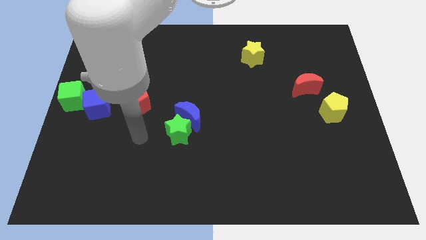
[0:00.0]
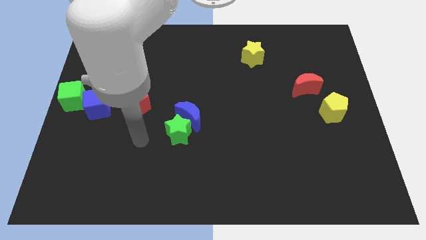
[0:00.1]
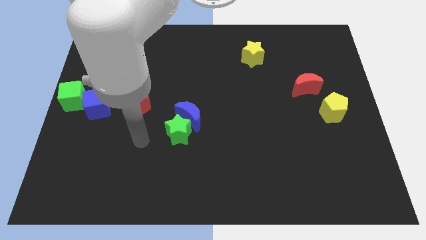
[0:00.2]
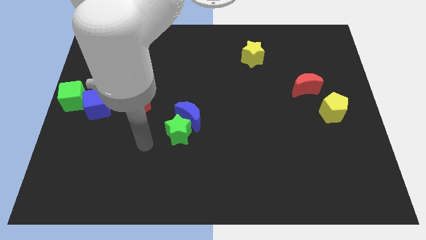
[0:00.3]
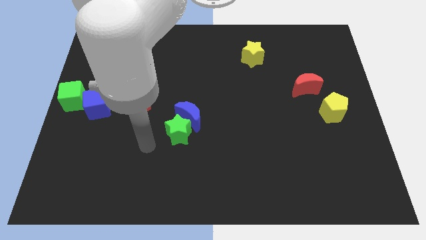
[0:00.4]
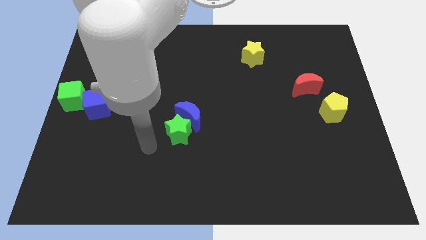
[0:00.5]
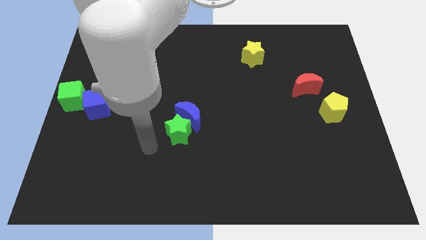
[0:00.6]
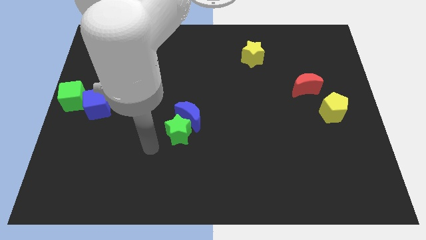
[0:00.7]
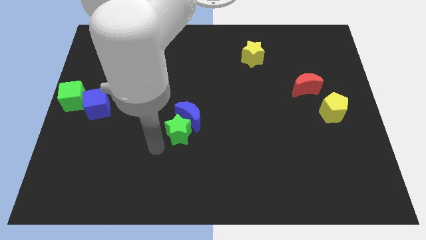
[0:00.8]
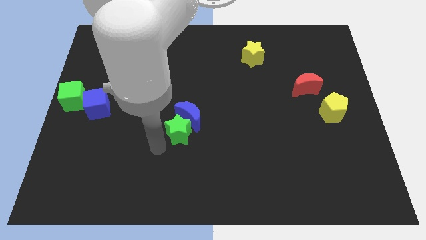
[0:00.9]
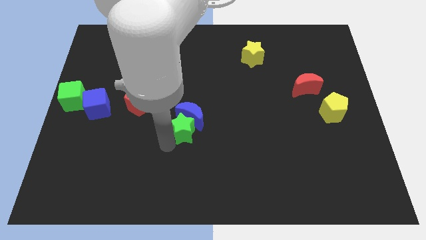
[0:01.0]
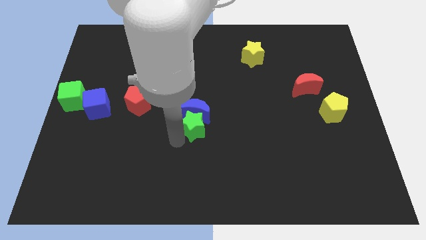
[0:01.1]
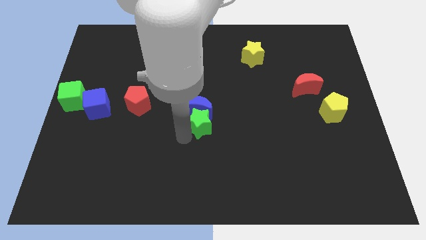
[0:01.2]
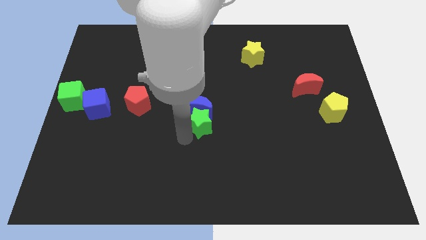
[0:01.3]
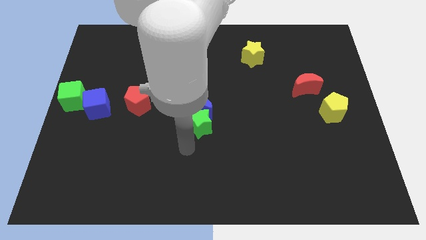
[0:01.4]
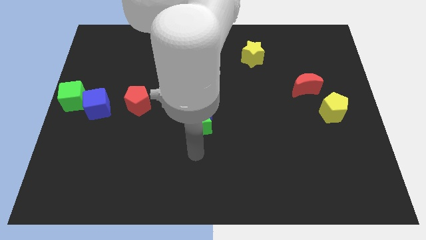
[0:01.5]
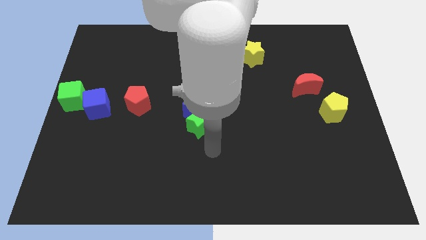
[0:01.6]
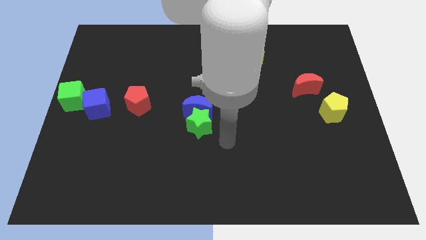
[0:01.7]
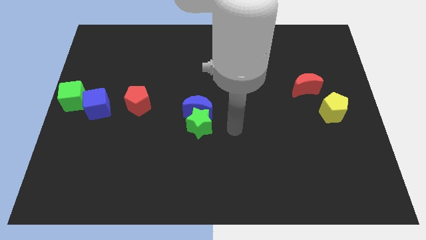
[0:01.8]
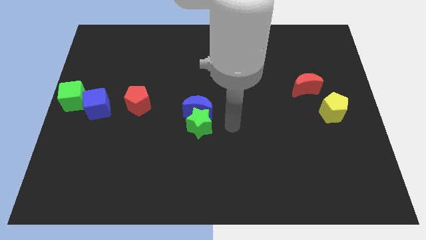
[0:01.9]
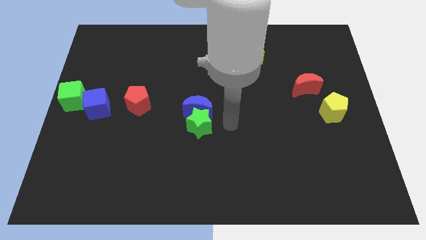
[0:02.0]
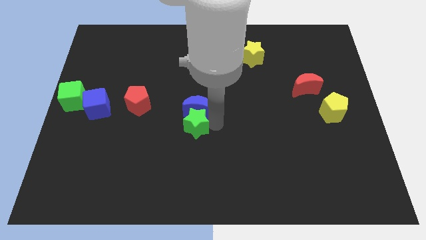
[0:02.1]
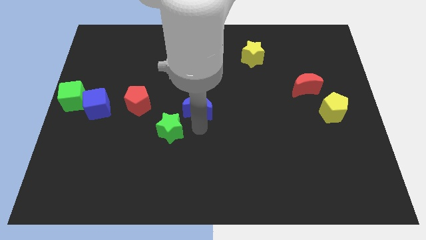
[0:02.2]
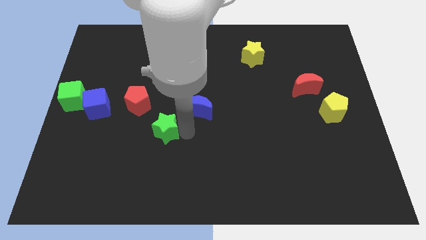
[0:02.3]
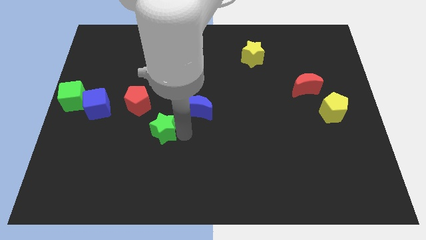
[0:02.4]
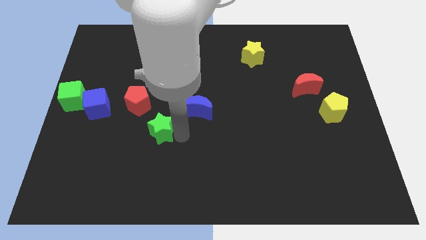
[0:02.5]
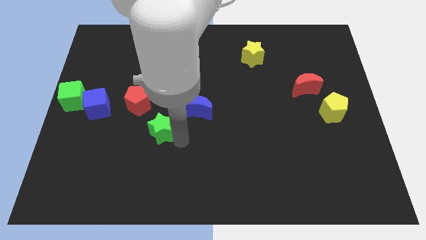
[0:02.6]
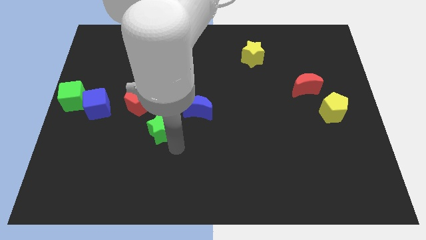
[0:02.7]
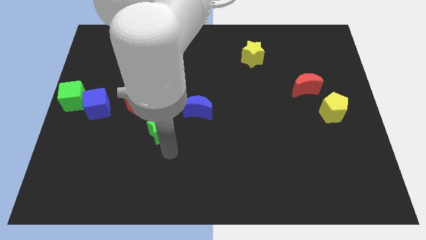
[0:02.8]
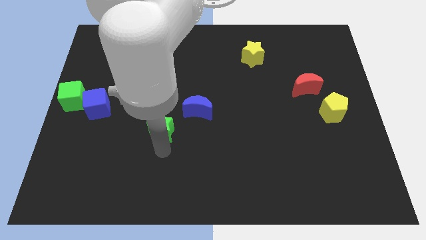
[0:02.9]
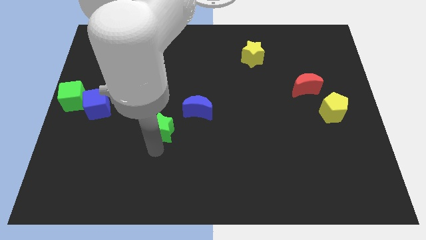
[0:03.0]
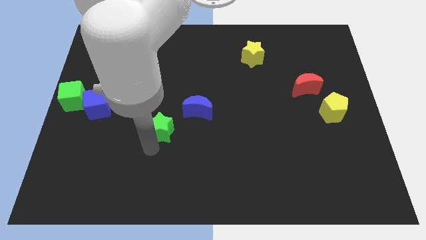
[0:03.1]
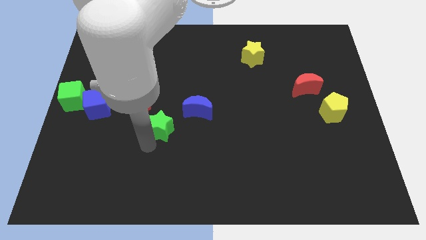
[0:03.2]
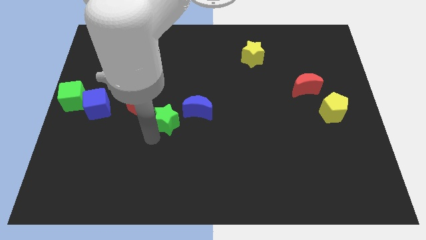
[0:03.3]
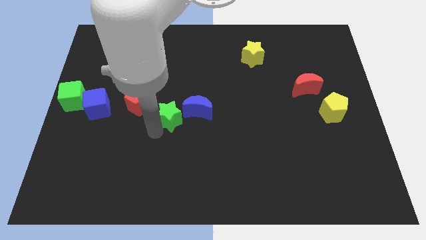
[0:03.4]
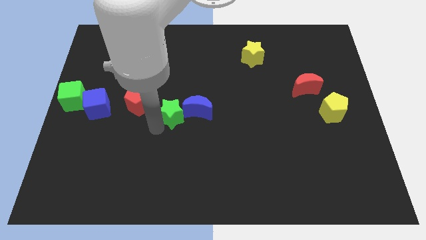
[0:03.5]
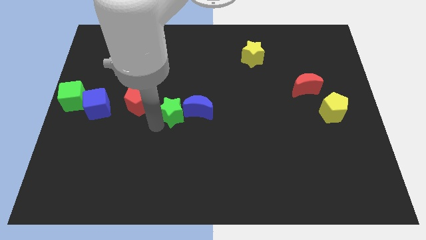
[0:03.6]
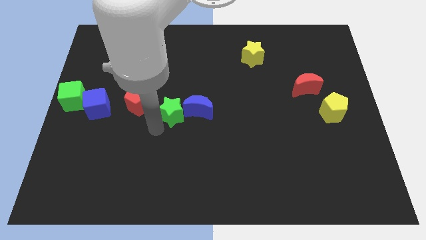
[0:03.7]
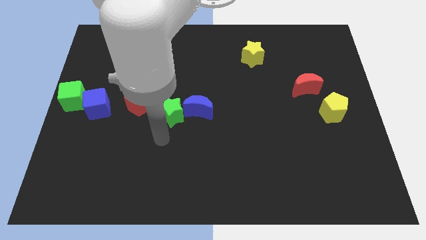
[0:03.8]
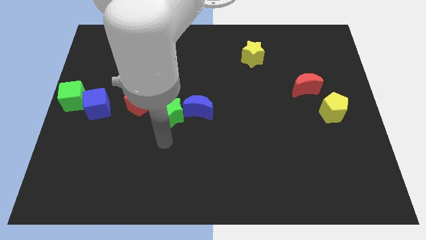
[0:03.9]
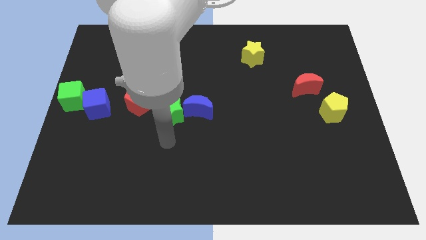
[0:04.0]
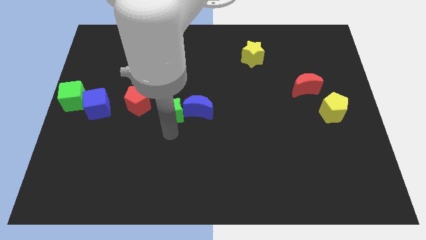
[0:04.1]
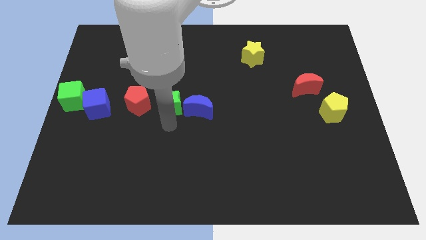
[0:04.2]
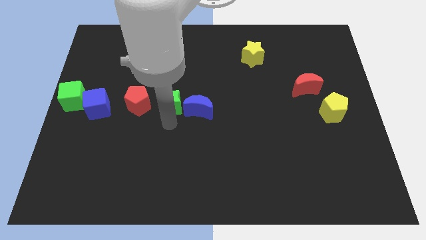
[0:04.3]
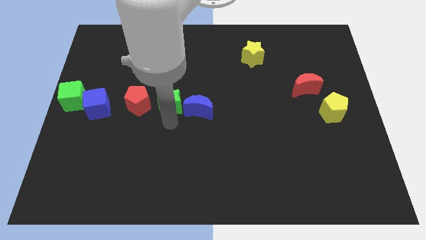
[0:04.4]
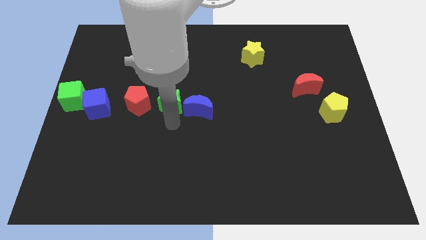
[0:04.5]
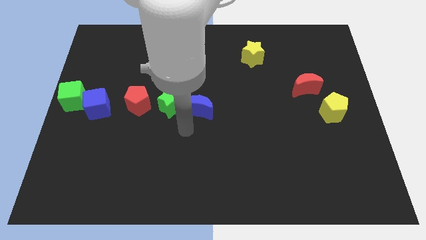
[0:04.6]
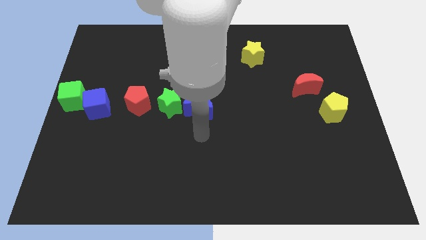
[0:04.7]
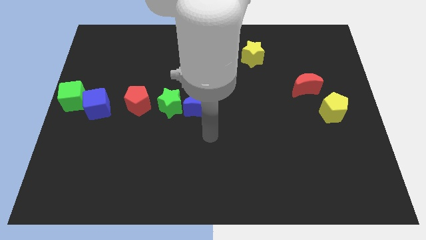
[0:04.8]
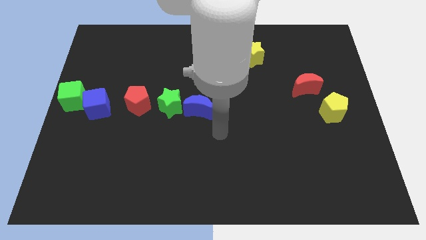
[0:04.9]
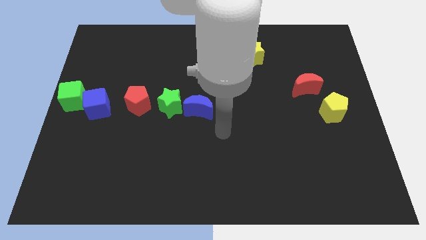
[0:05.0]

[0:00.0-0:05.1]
place the green star in between red pentagon and blue crescent

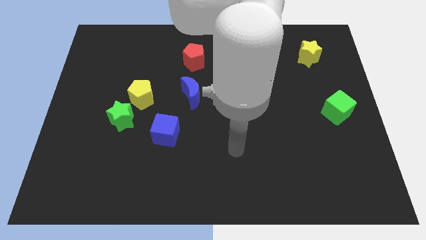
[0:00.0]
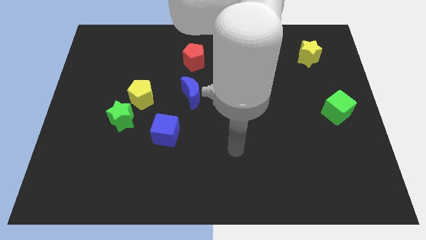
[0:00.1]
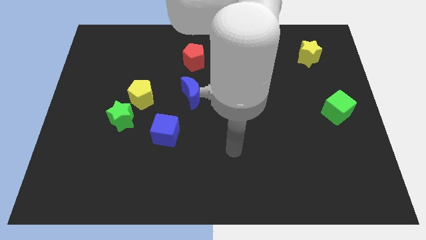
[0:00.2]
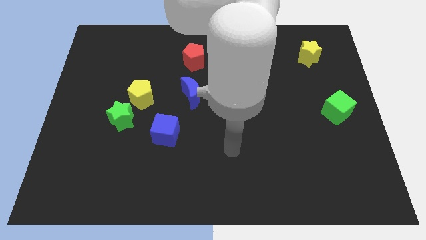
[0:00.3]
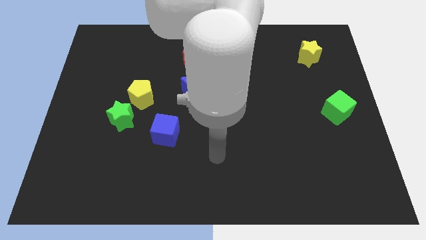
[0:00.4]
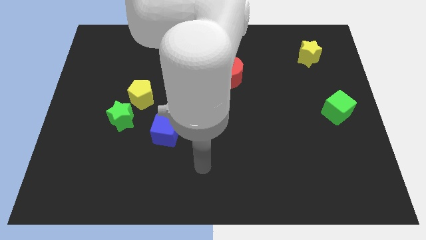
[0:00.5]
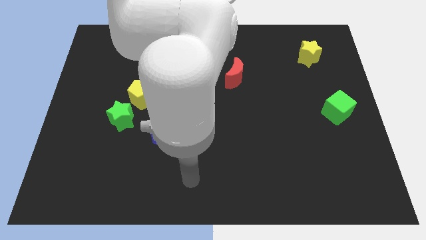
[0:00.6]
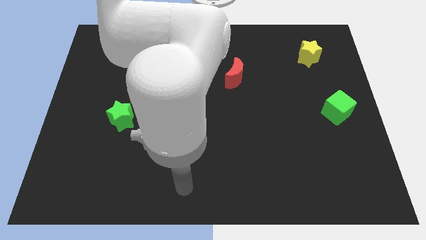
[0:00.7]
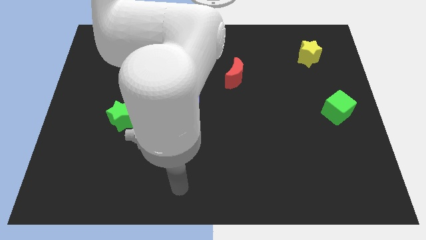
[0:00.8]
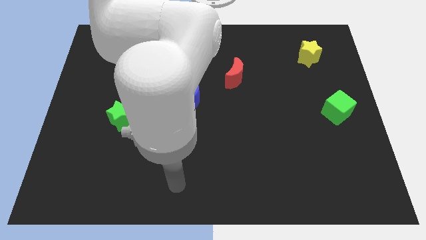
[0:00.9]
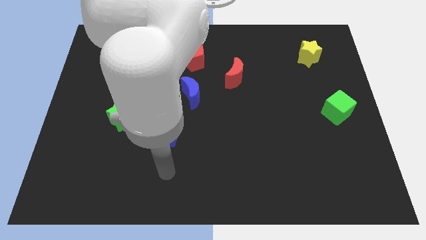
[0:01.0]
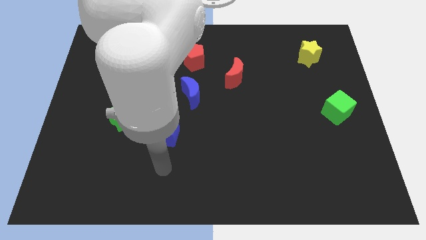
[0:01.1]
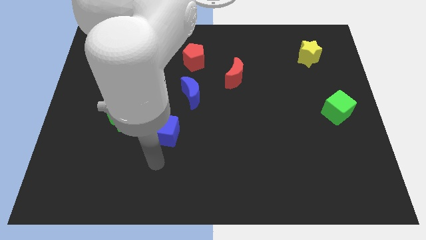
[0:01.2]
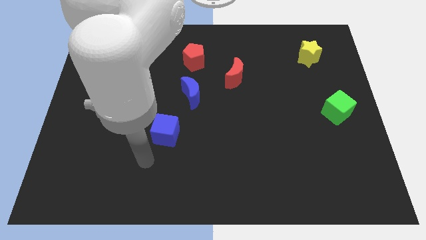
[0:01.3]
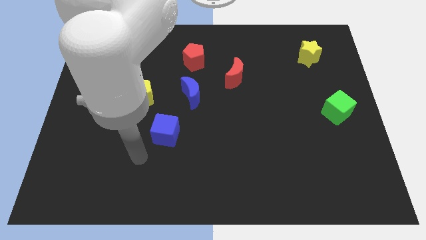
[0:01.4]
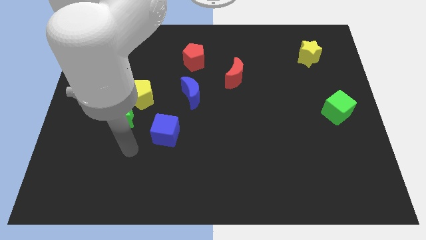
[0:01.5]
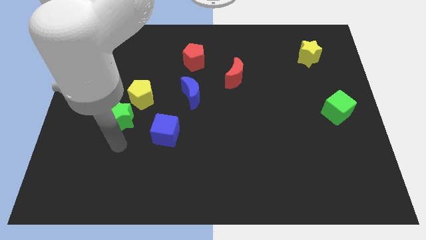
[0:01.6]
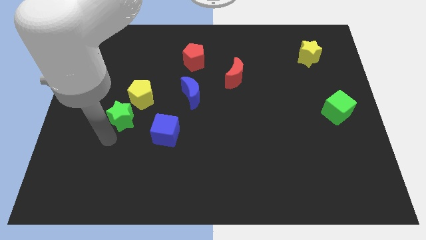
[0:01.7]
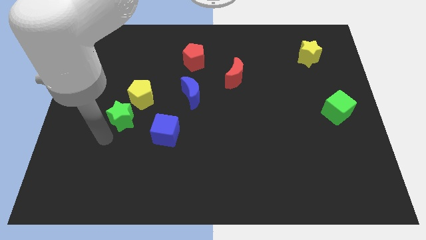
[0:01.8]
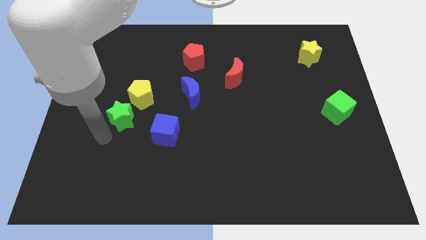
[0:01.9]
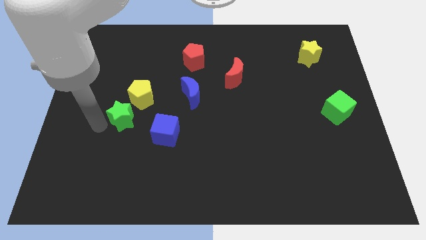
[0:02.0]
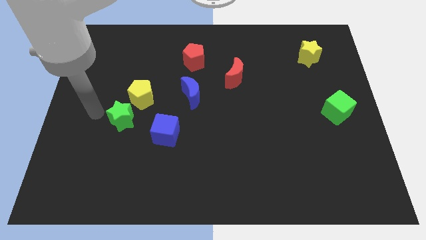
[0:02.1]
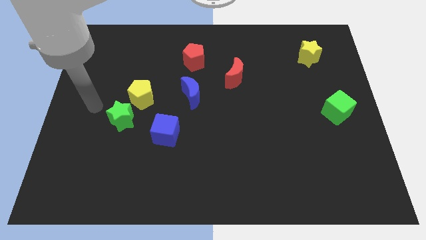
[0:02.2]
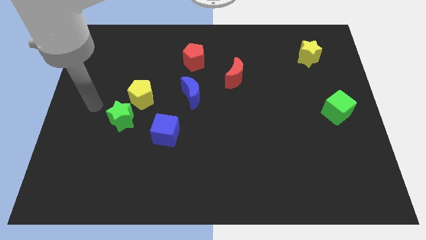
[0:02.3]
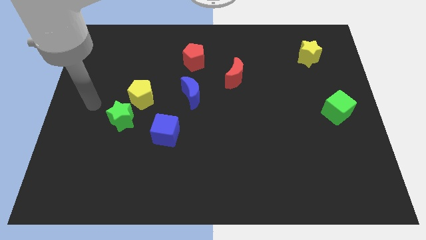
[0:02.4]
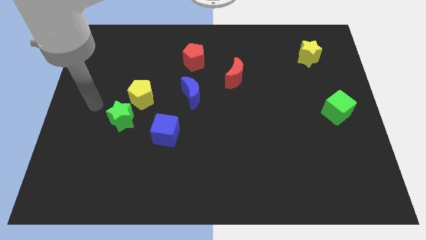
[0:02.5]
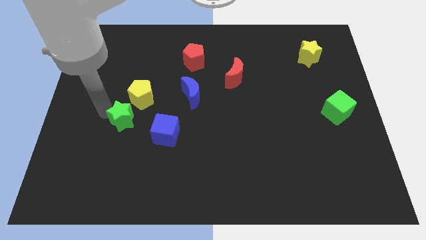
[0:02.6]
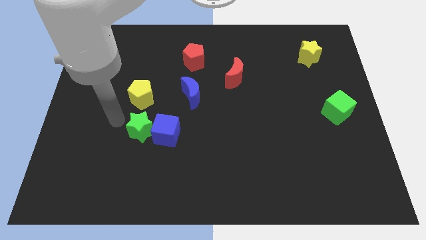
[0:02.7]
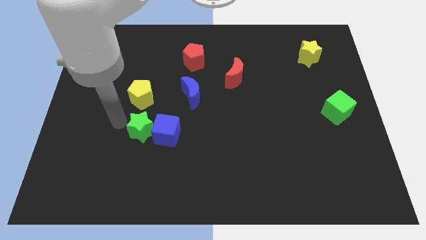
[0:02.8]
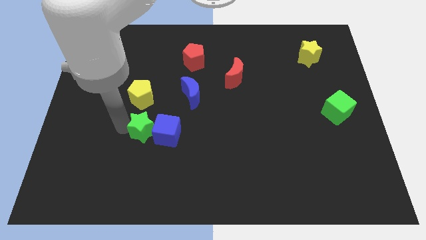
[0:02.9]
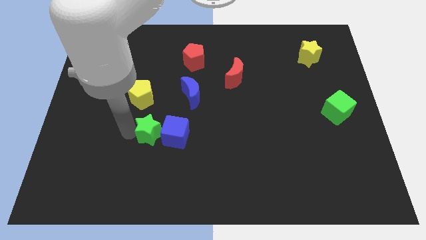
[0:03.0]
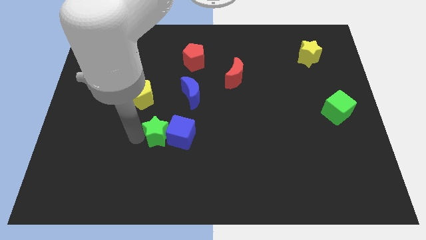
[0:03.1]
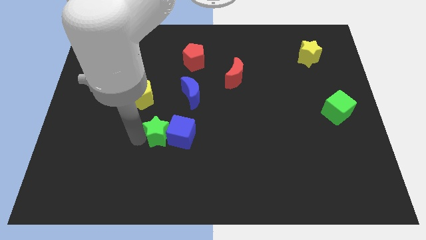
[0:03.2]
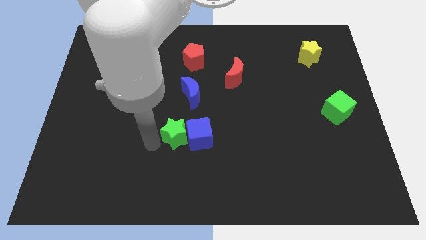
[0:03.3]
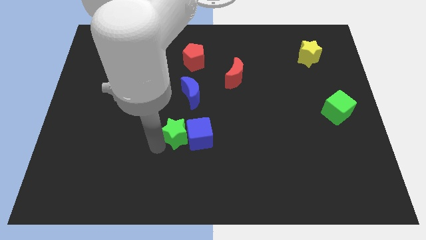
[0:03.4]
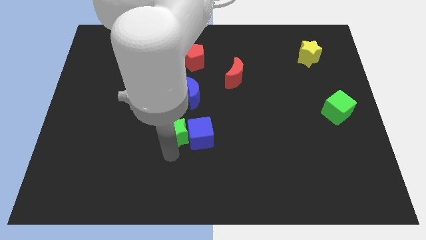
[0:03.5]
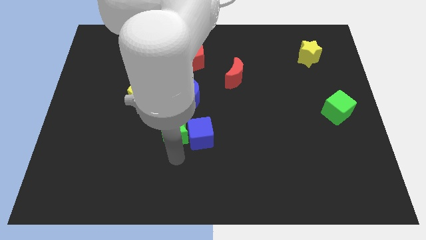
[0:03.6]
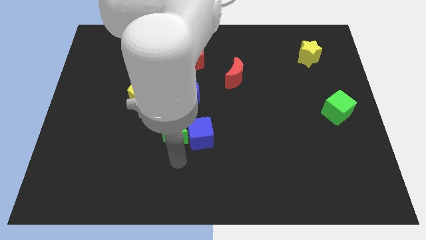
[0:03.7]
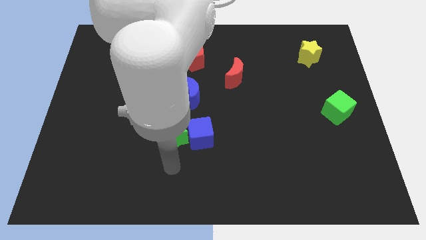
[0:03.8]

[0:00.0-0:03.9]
push the green star and blue cube to the bottom side of the blue crescent

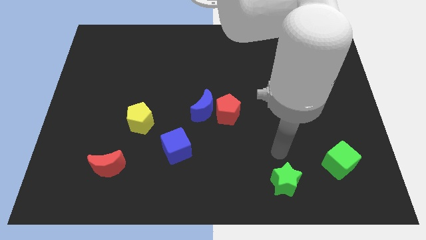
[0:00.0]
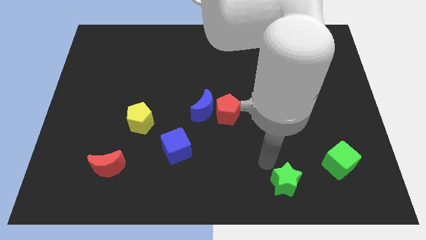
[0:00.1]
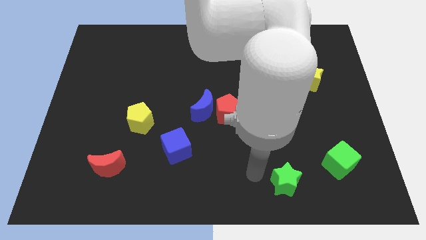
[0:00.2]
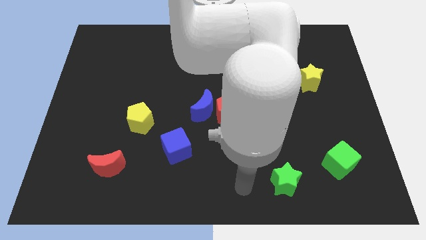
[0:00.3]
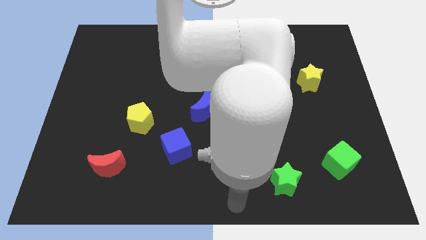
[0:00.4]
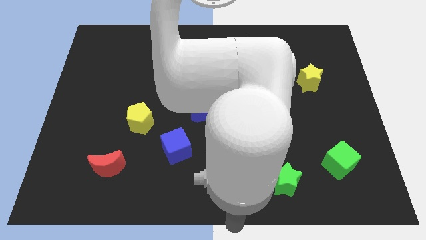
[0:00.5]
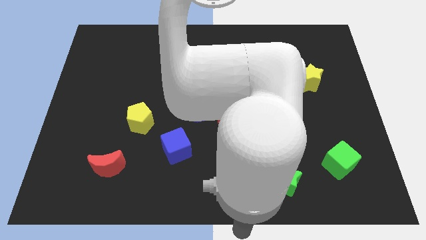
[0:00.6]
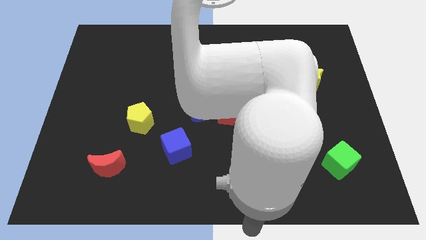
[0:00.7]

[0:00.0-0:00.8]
place arm at bottom center
